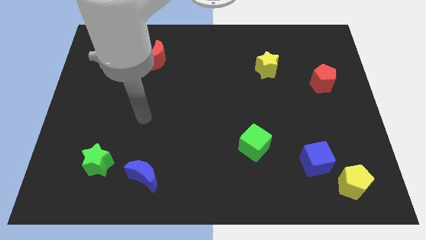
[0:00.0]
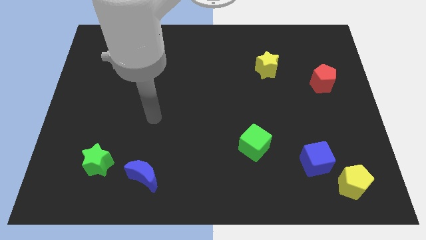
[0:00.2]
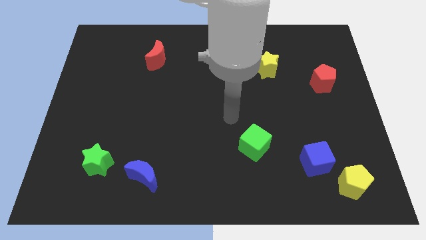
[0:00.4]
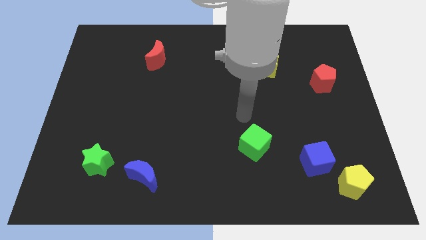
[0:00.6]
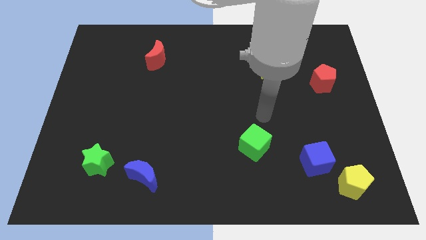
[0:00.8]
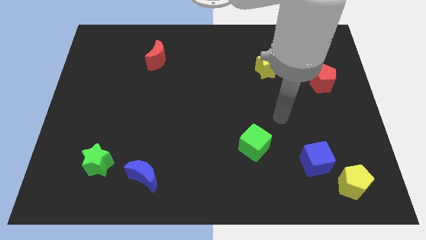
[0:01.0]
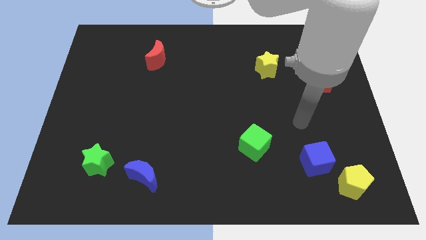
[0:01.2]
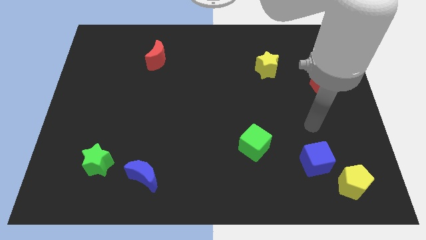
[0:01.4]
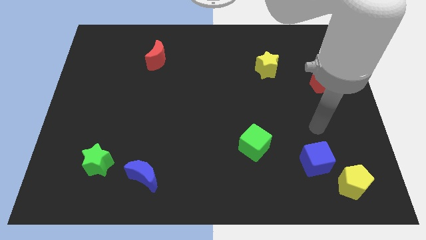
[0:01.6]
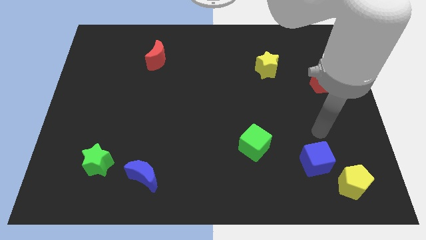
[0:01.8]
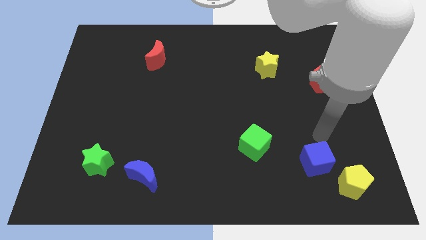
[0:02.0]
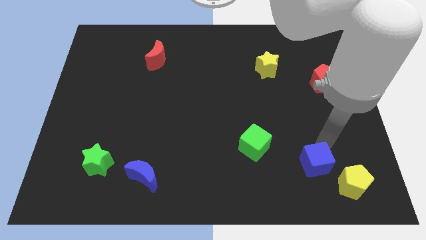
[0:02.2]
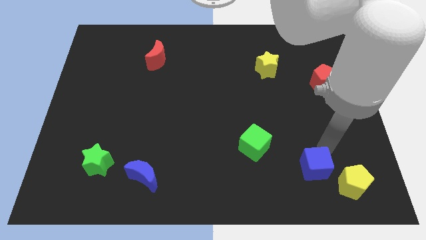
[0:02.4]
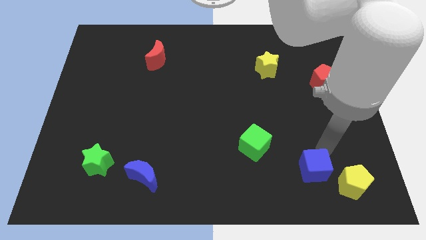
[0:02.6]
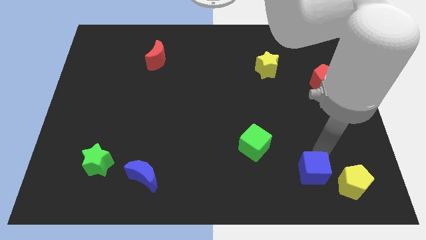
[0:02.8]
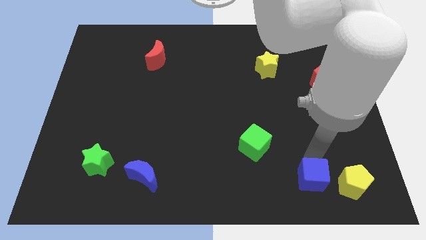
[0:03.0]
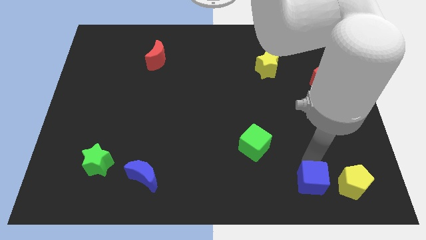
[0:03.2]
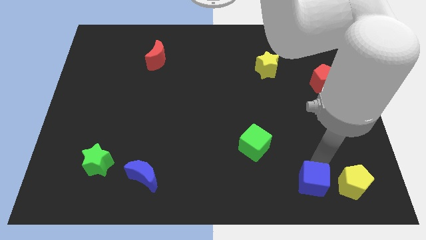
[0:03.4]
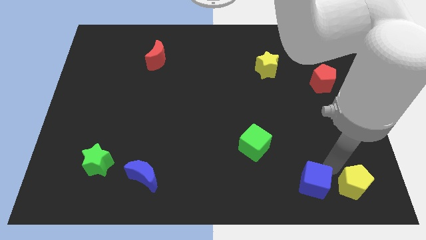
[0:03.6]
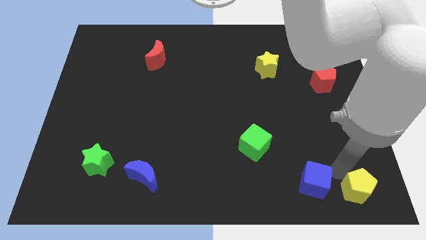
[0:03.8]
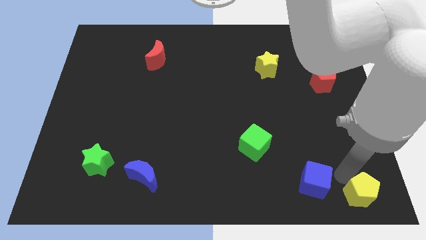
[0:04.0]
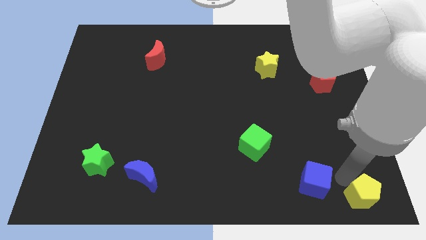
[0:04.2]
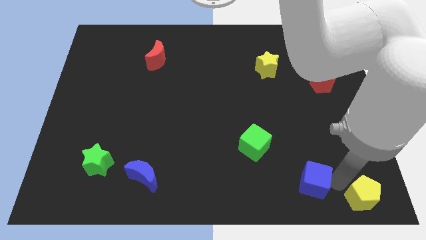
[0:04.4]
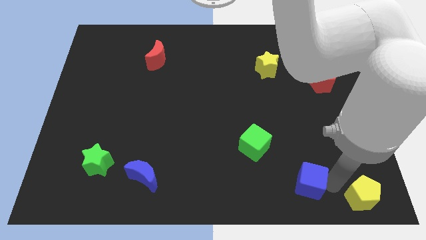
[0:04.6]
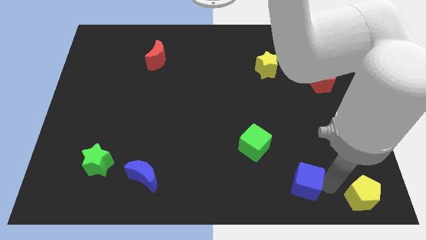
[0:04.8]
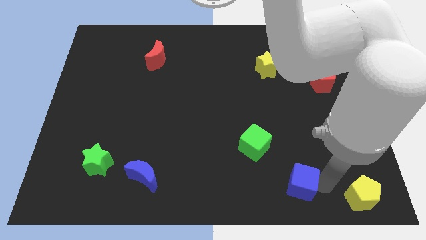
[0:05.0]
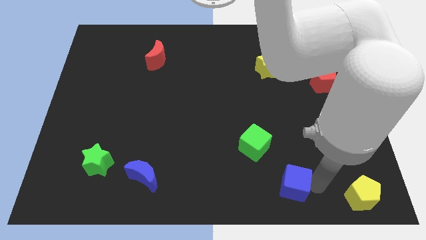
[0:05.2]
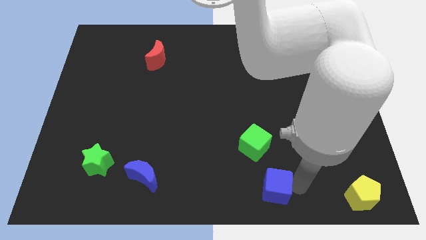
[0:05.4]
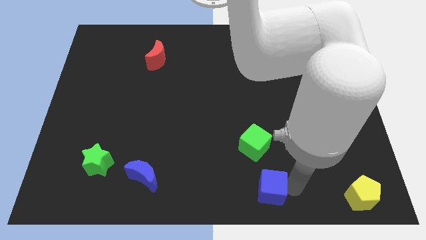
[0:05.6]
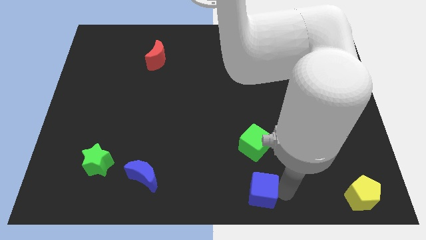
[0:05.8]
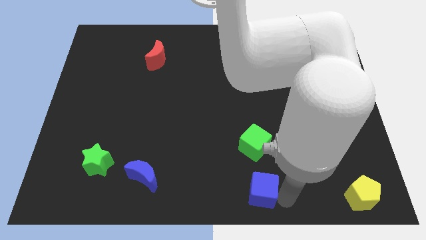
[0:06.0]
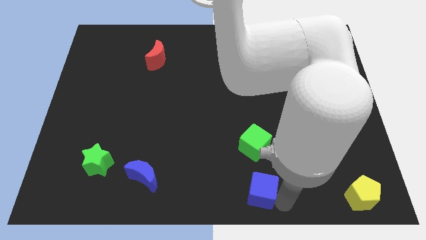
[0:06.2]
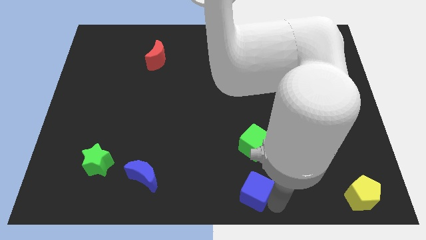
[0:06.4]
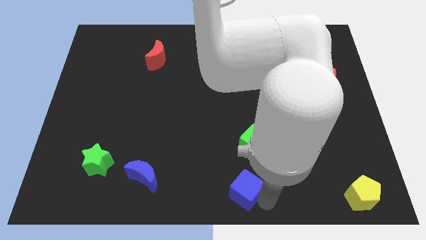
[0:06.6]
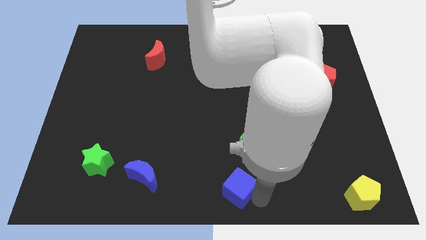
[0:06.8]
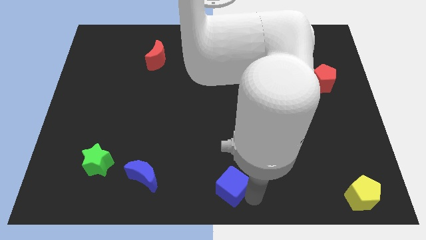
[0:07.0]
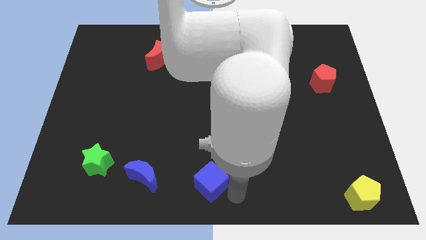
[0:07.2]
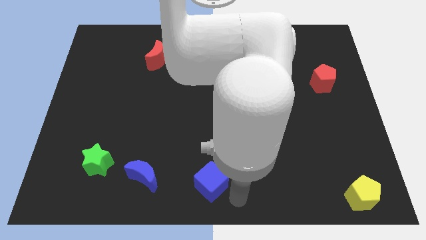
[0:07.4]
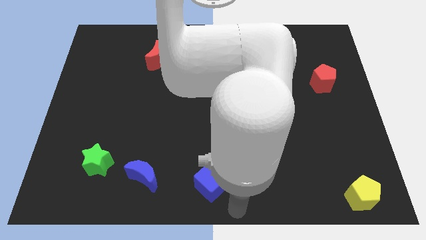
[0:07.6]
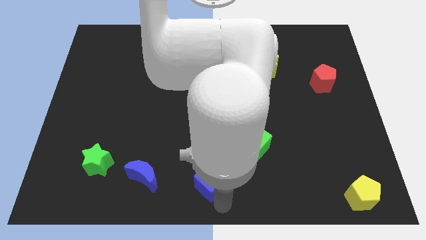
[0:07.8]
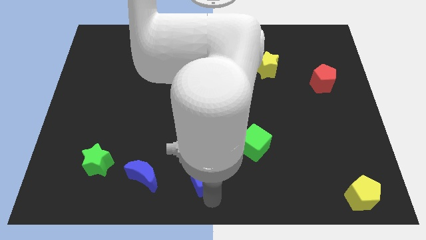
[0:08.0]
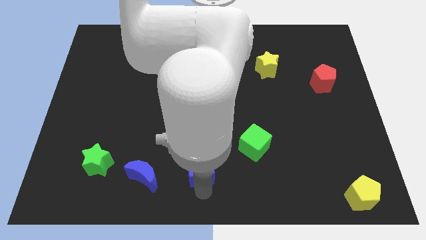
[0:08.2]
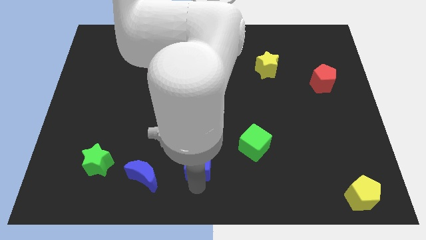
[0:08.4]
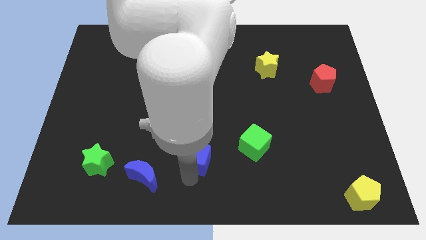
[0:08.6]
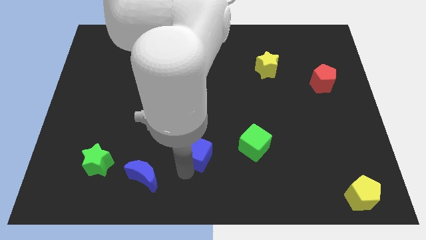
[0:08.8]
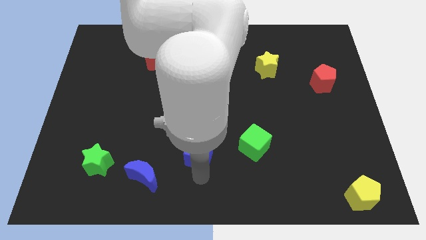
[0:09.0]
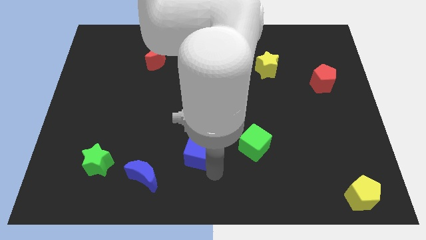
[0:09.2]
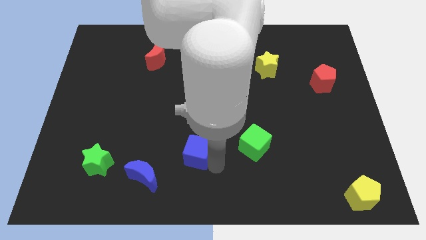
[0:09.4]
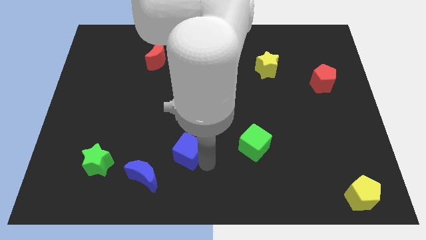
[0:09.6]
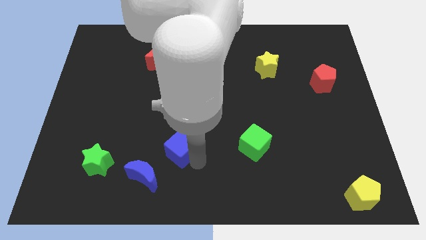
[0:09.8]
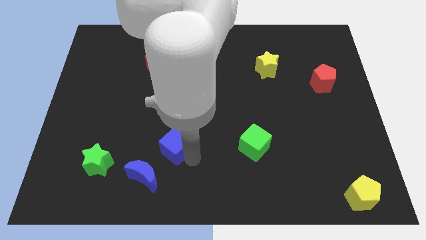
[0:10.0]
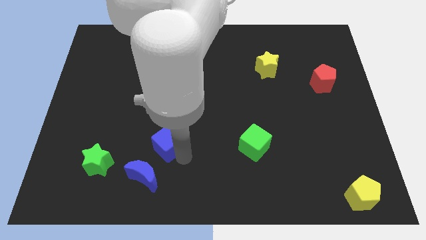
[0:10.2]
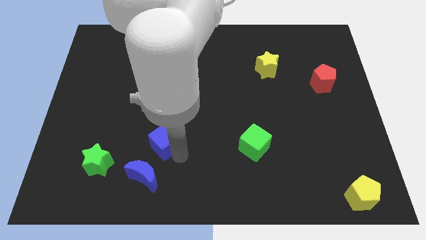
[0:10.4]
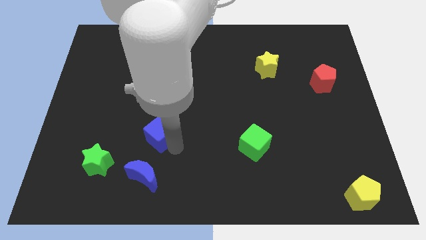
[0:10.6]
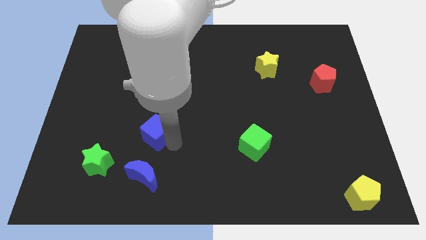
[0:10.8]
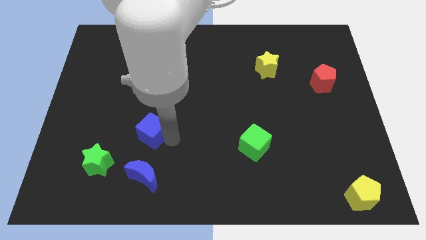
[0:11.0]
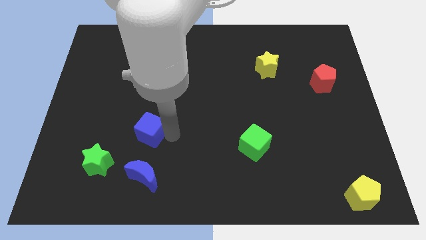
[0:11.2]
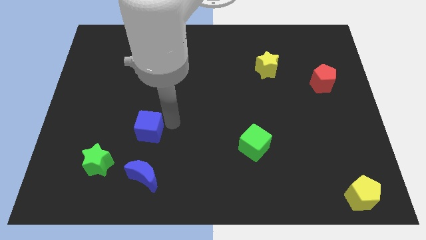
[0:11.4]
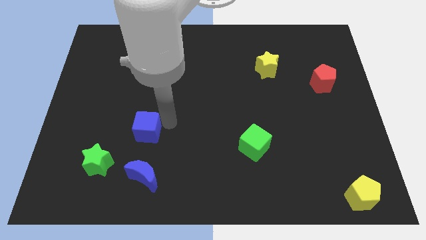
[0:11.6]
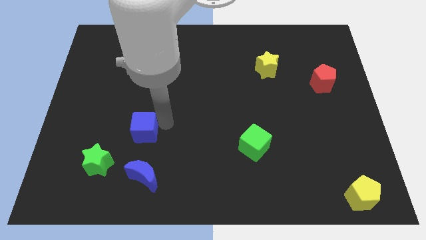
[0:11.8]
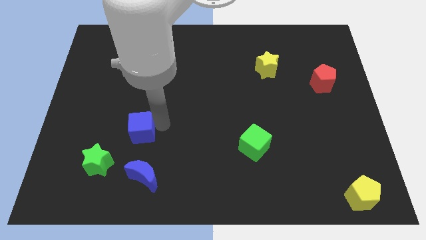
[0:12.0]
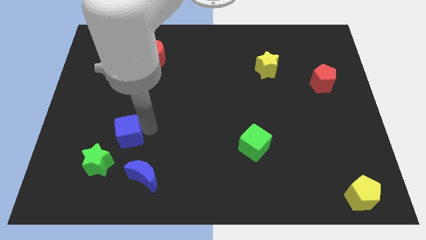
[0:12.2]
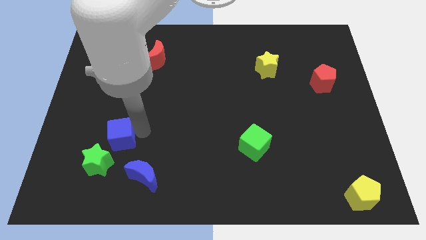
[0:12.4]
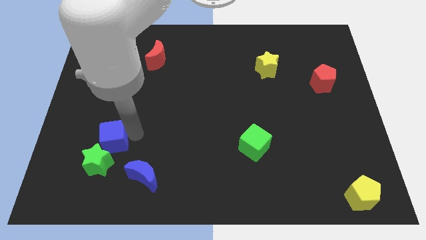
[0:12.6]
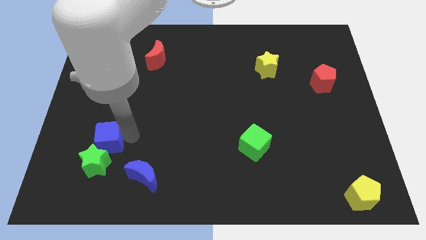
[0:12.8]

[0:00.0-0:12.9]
push the blue cube to the green star

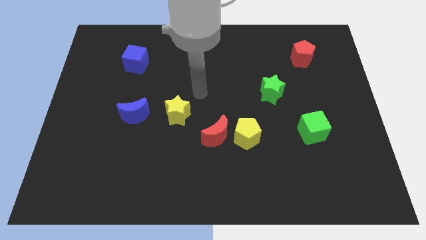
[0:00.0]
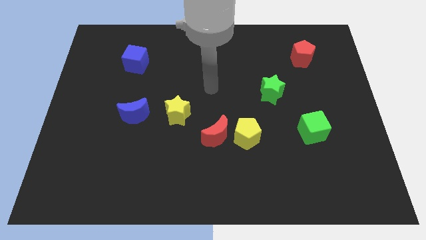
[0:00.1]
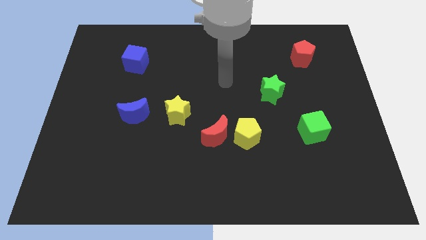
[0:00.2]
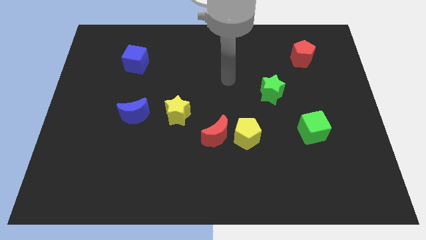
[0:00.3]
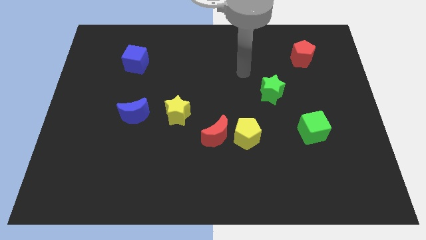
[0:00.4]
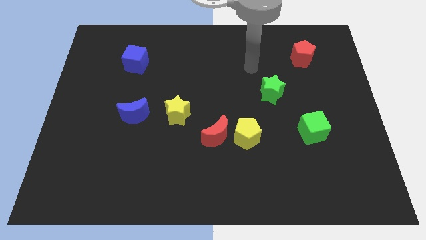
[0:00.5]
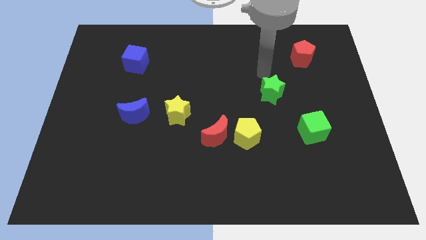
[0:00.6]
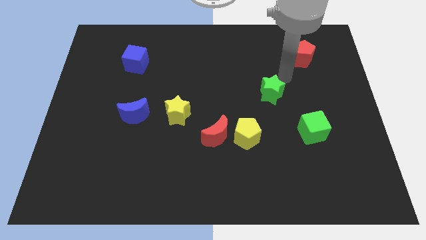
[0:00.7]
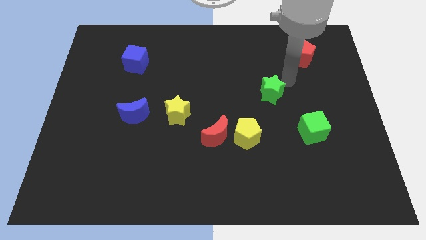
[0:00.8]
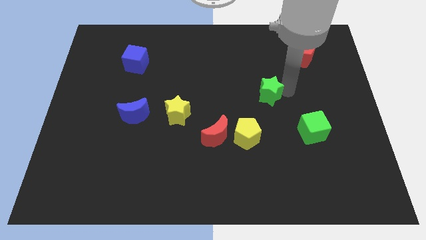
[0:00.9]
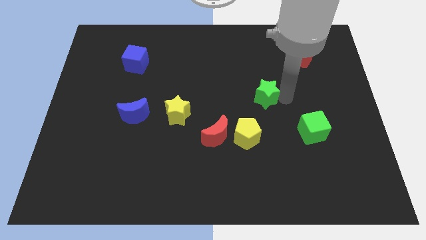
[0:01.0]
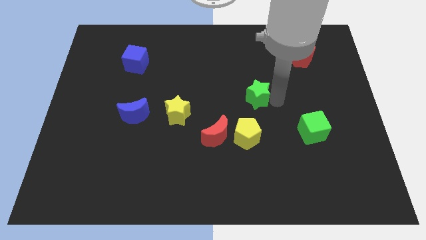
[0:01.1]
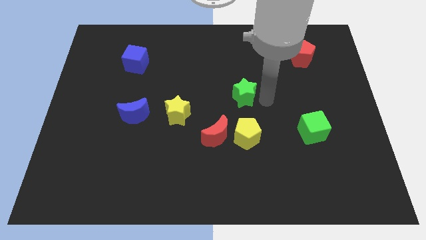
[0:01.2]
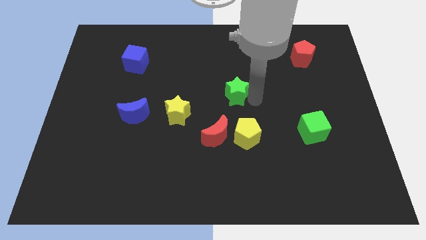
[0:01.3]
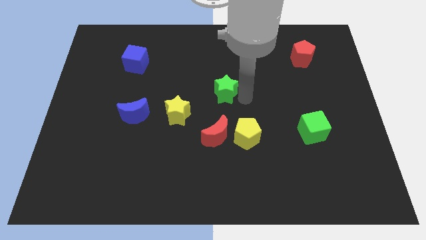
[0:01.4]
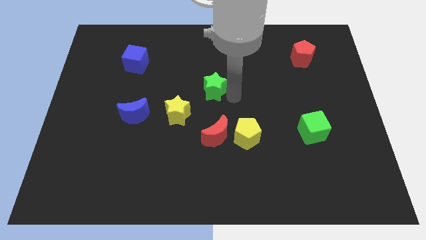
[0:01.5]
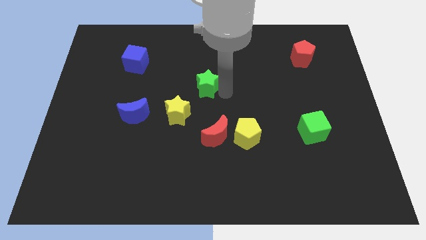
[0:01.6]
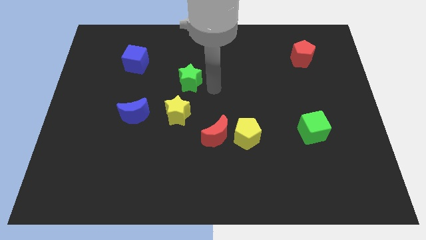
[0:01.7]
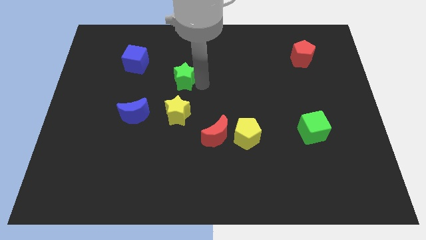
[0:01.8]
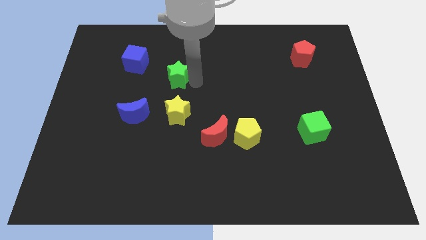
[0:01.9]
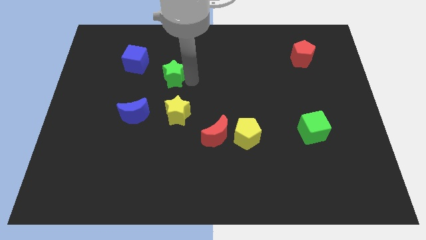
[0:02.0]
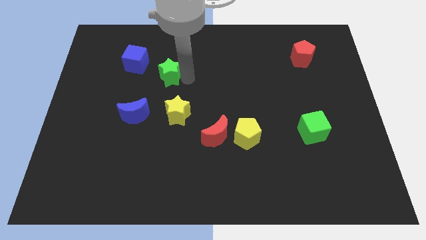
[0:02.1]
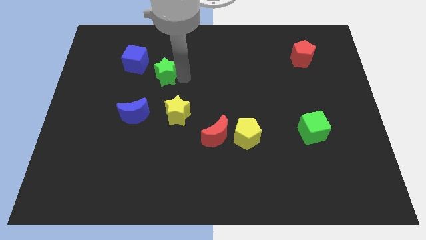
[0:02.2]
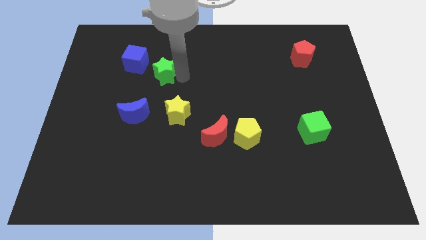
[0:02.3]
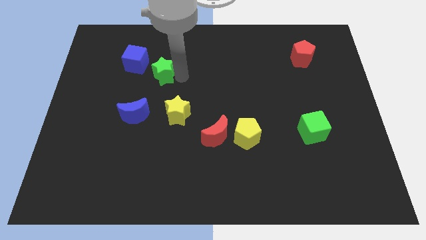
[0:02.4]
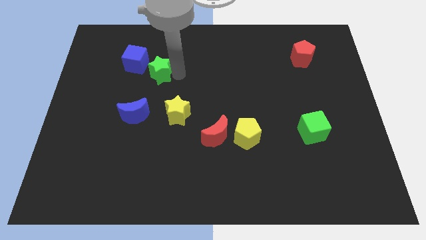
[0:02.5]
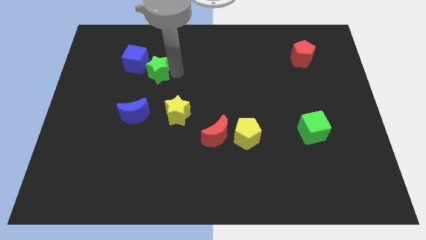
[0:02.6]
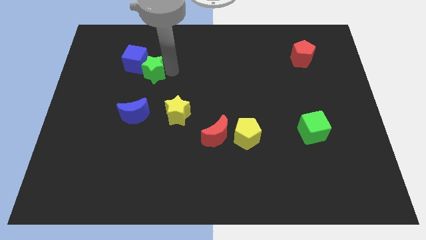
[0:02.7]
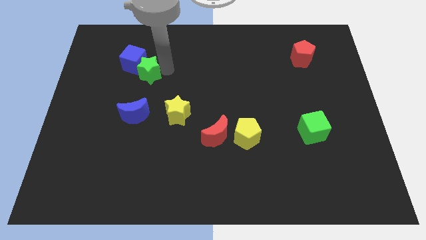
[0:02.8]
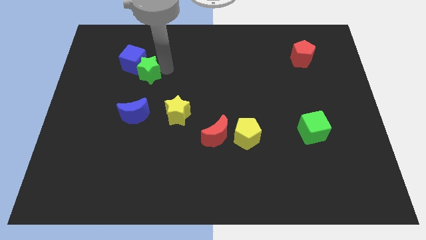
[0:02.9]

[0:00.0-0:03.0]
put the green star next to the blue cube
